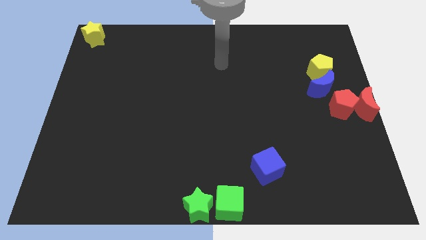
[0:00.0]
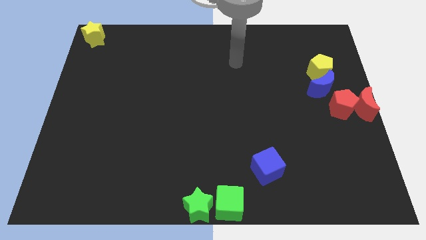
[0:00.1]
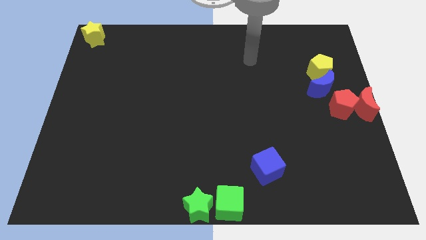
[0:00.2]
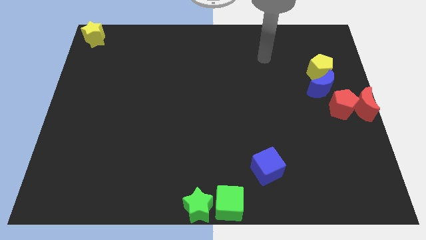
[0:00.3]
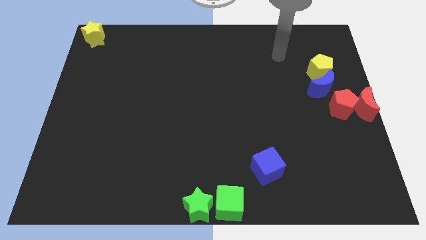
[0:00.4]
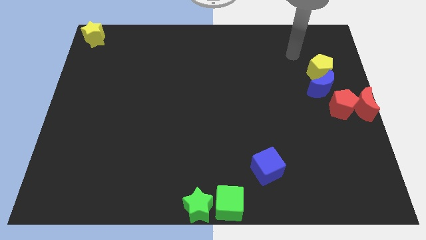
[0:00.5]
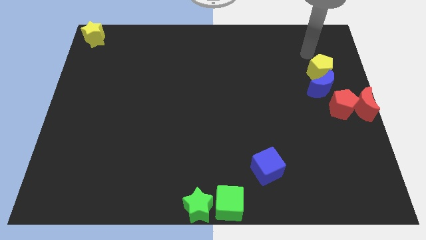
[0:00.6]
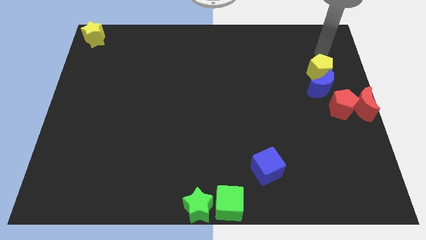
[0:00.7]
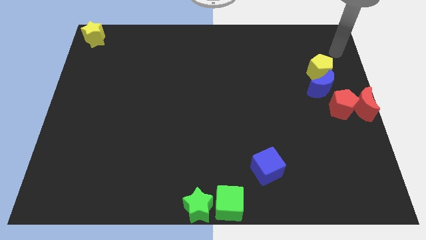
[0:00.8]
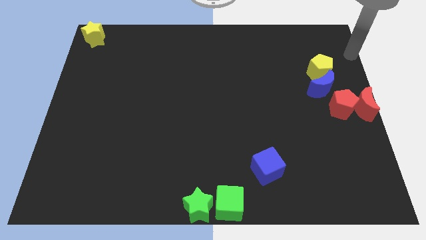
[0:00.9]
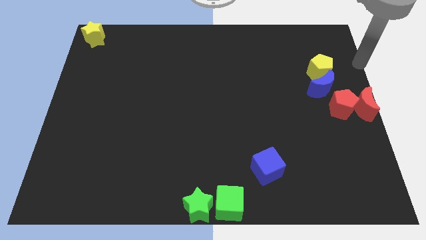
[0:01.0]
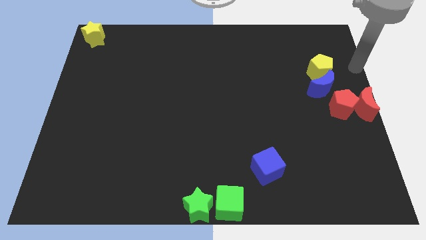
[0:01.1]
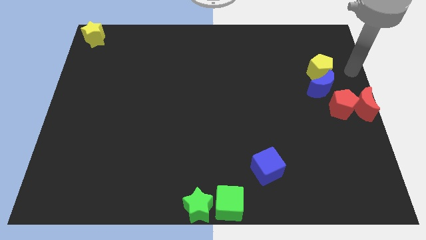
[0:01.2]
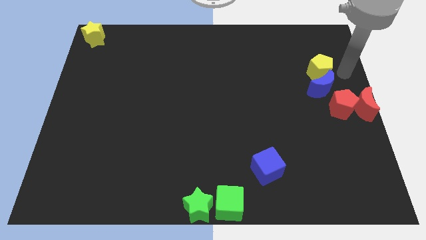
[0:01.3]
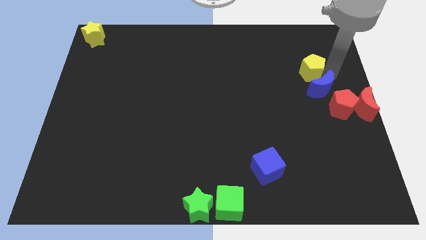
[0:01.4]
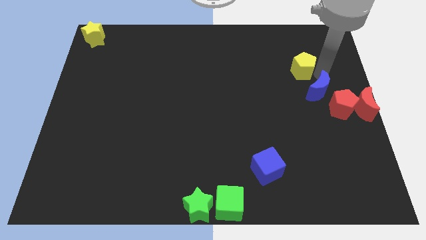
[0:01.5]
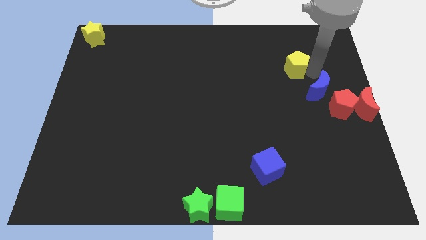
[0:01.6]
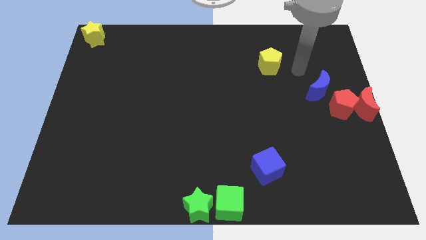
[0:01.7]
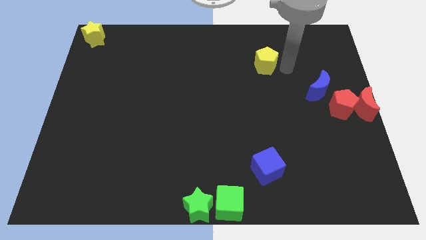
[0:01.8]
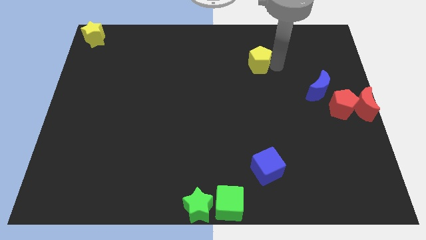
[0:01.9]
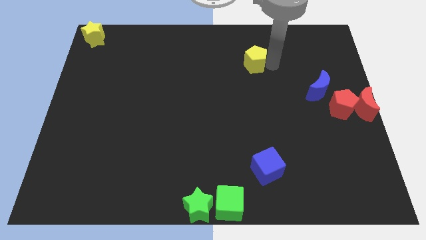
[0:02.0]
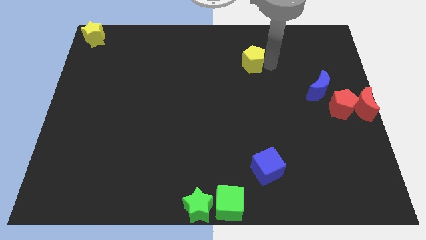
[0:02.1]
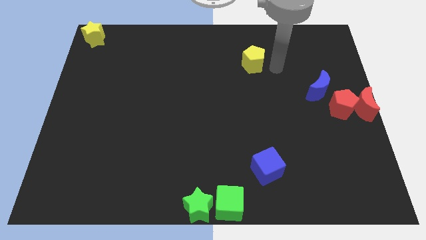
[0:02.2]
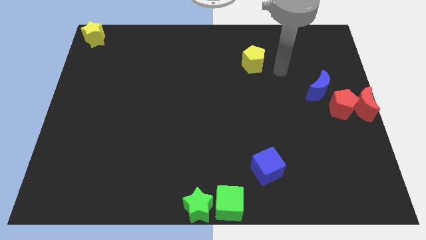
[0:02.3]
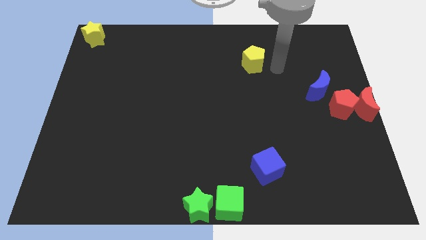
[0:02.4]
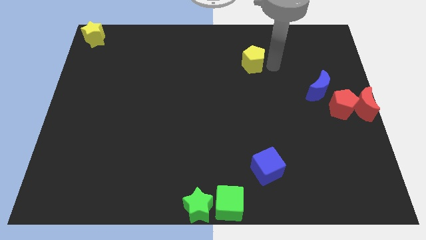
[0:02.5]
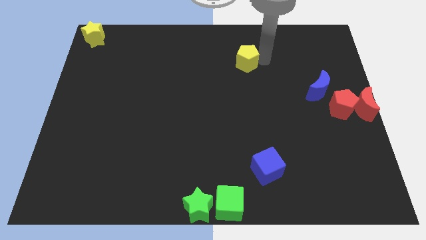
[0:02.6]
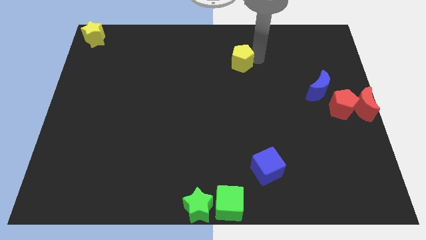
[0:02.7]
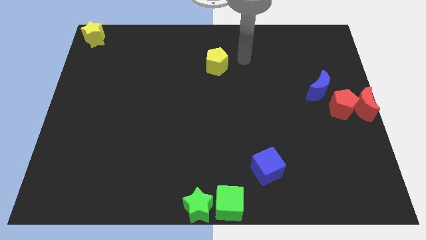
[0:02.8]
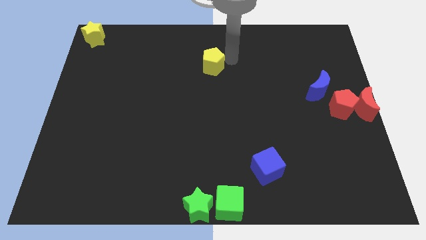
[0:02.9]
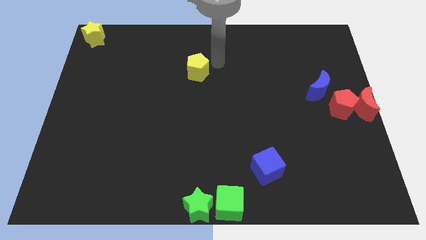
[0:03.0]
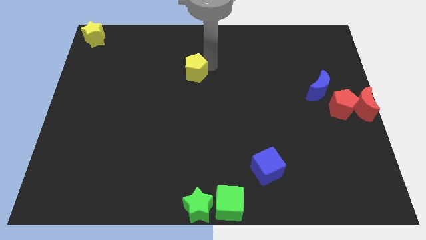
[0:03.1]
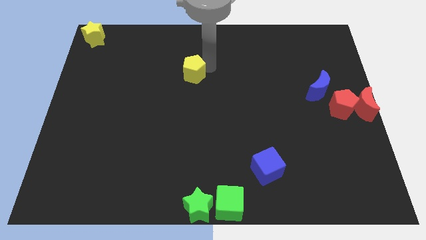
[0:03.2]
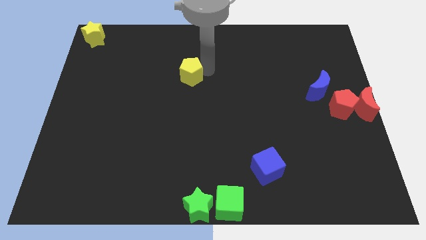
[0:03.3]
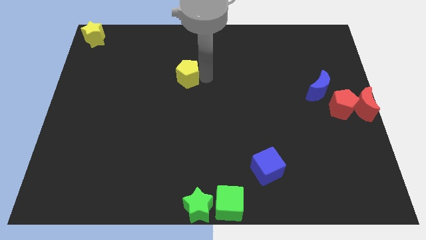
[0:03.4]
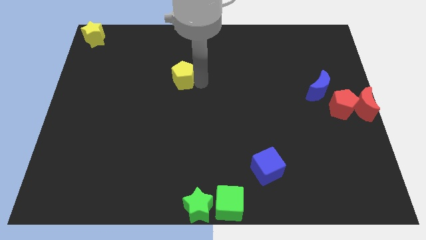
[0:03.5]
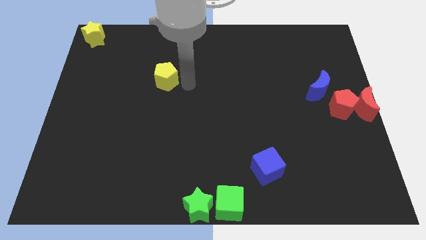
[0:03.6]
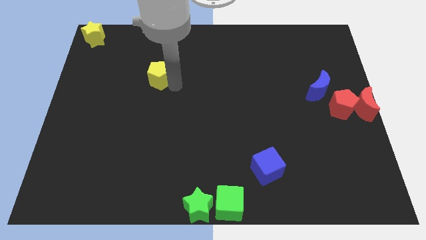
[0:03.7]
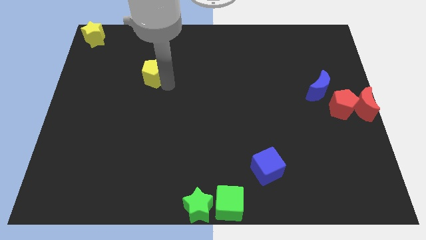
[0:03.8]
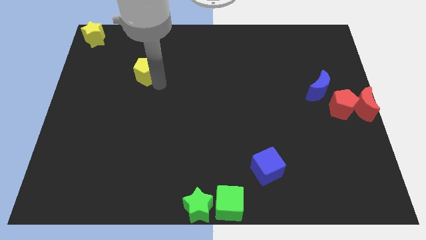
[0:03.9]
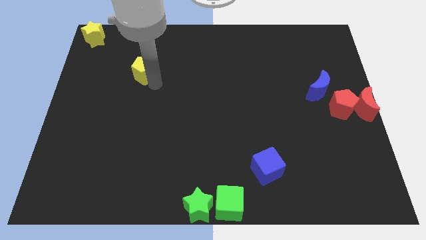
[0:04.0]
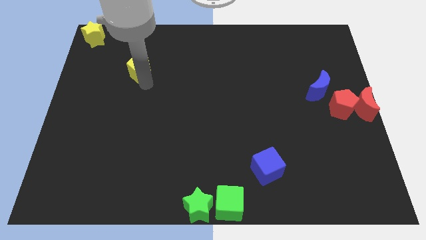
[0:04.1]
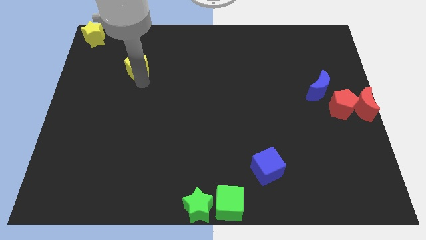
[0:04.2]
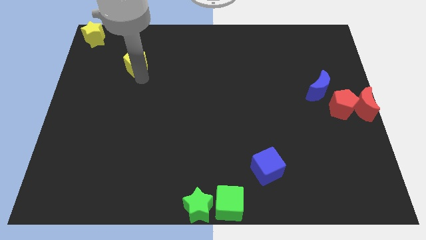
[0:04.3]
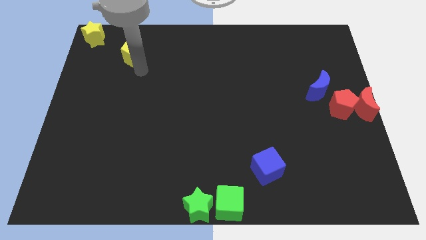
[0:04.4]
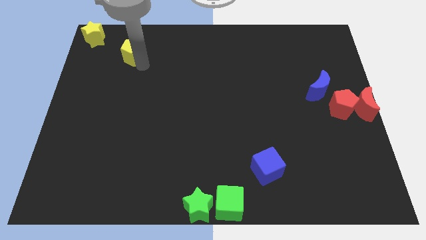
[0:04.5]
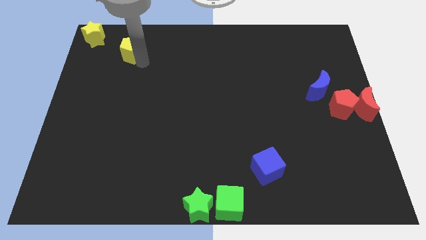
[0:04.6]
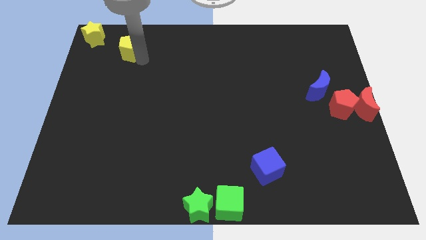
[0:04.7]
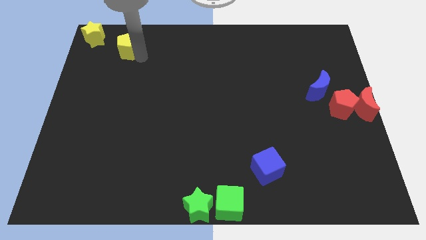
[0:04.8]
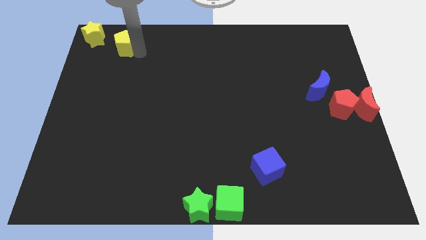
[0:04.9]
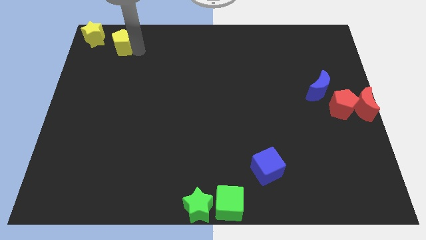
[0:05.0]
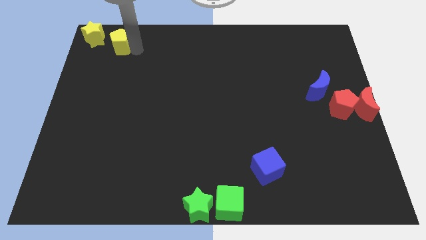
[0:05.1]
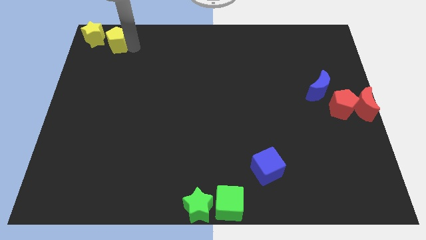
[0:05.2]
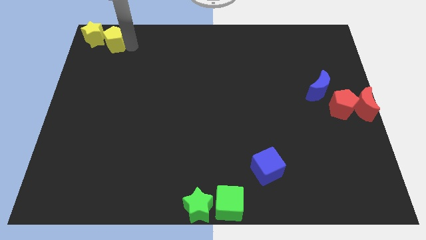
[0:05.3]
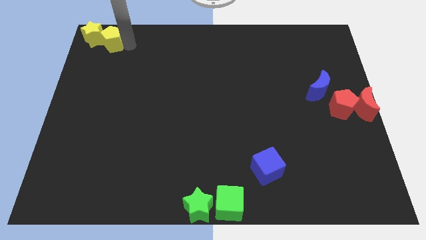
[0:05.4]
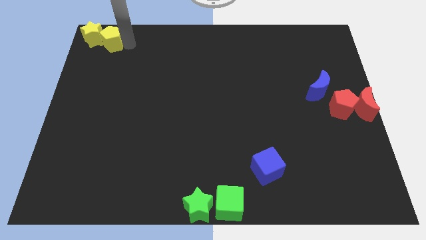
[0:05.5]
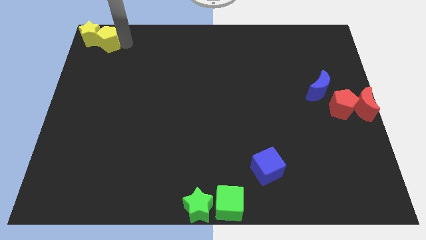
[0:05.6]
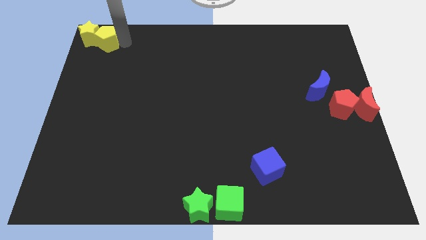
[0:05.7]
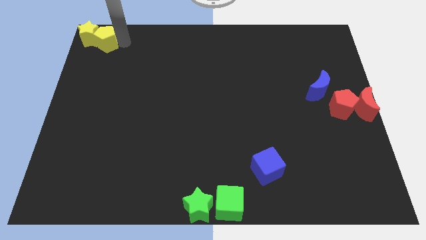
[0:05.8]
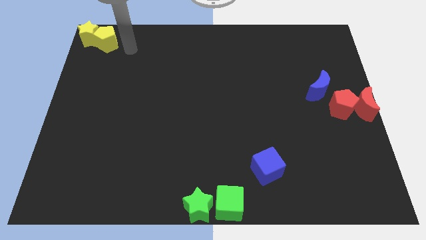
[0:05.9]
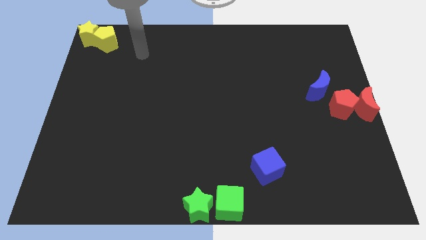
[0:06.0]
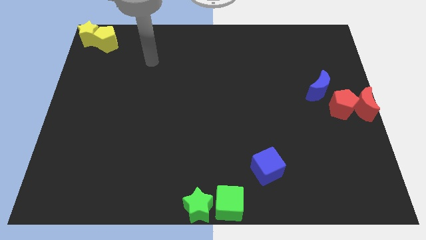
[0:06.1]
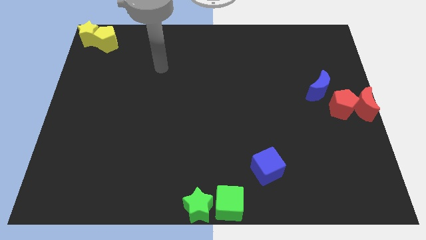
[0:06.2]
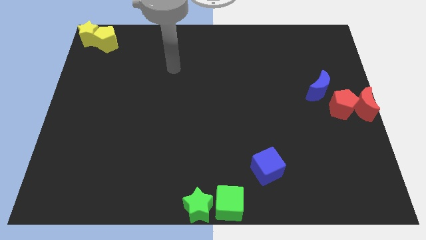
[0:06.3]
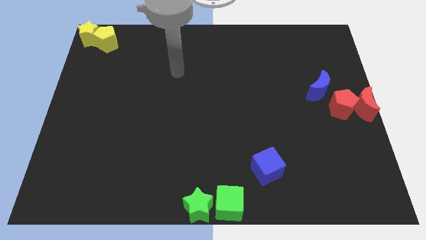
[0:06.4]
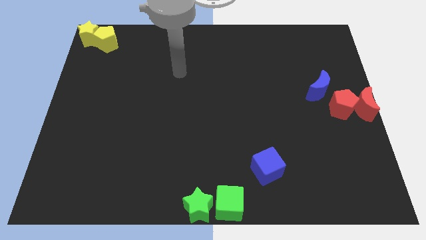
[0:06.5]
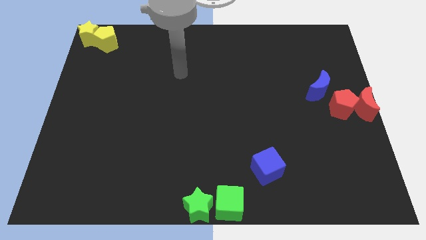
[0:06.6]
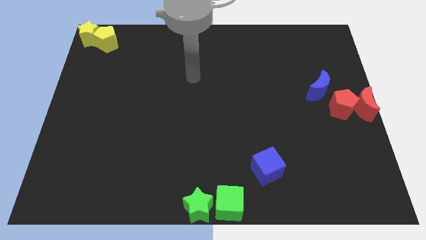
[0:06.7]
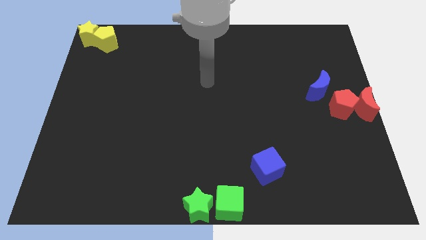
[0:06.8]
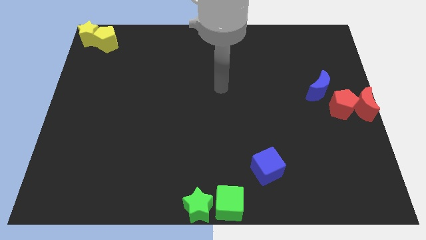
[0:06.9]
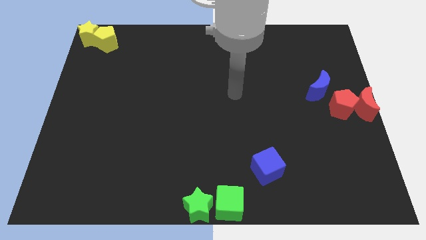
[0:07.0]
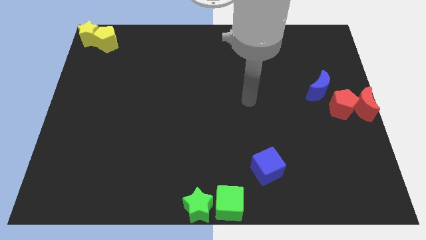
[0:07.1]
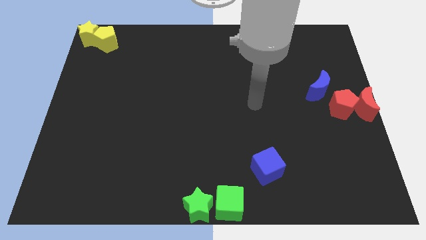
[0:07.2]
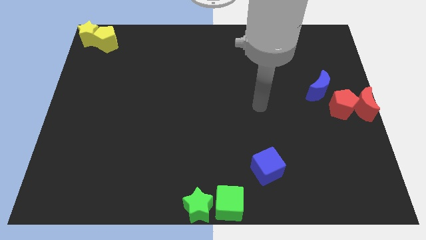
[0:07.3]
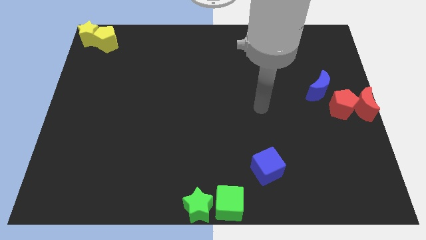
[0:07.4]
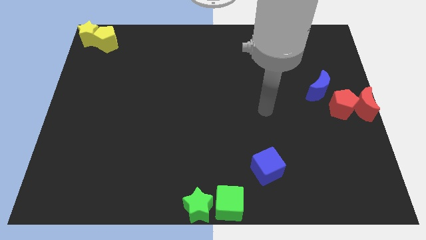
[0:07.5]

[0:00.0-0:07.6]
move yellow pentagon to the top left corner of the board

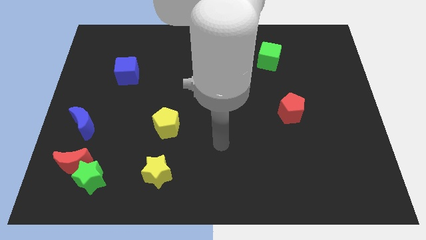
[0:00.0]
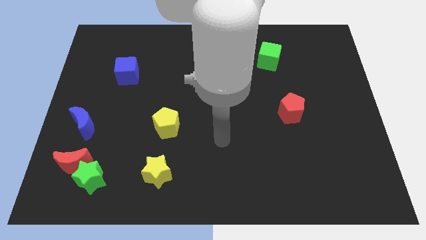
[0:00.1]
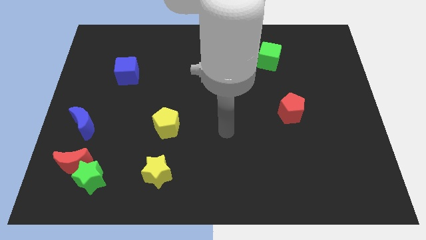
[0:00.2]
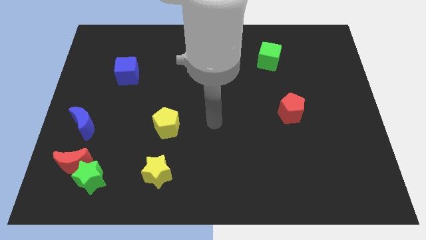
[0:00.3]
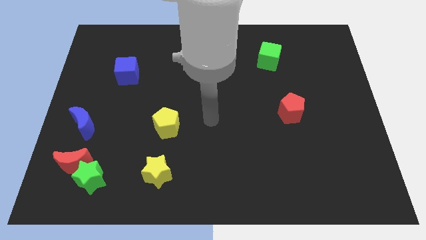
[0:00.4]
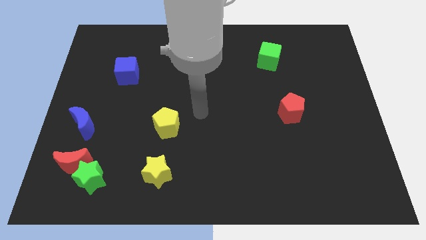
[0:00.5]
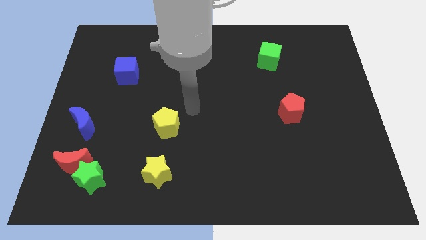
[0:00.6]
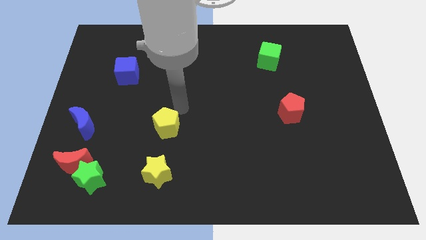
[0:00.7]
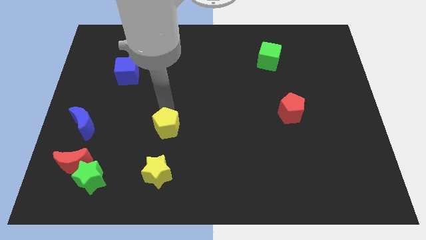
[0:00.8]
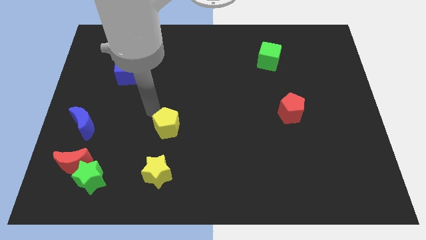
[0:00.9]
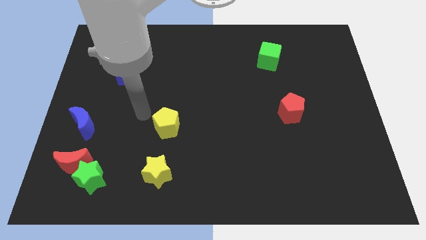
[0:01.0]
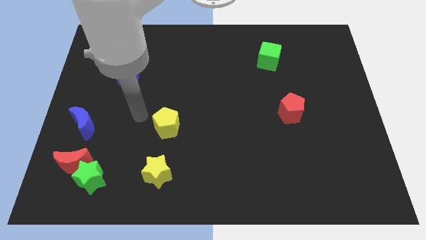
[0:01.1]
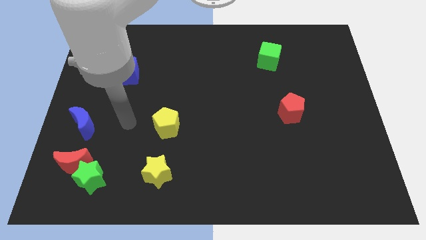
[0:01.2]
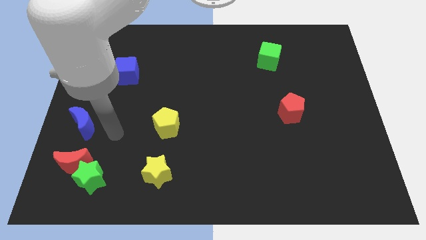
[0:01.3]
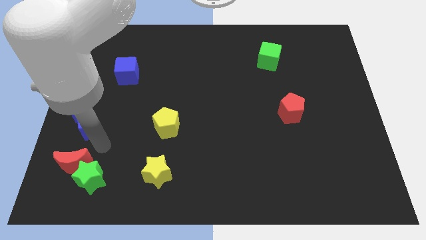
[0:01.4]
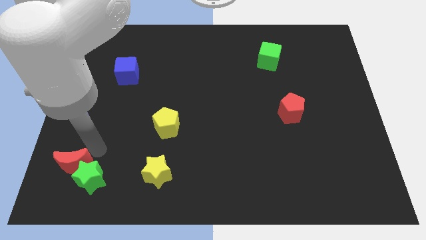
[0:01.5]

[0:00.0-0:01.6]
push your arm at the top right side of the red crescent

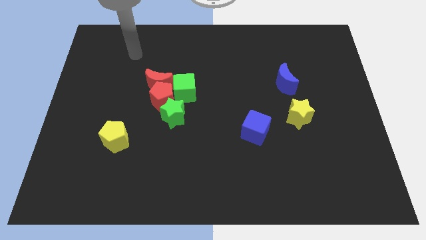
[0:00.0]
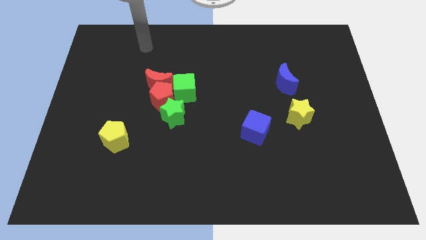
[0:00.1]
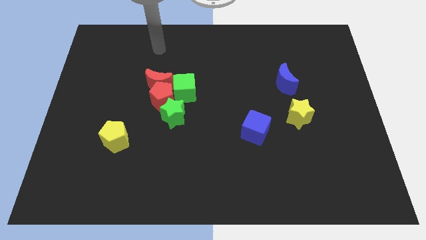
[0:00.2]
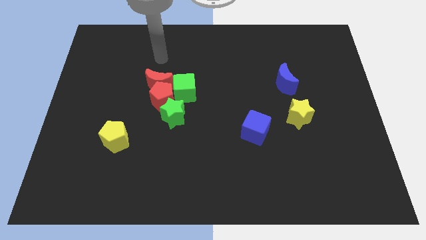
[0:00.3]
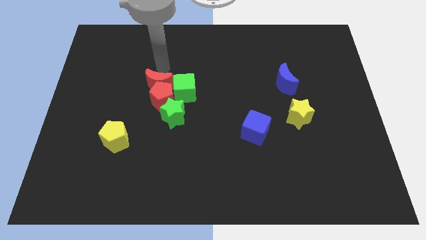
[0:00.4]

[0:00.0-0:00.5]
point your arm at the top of red moon
